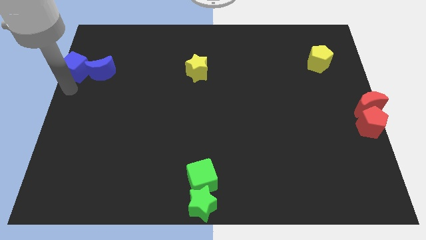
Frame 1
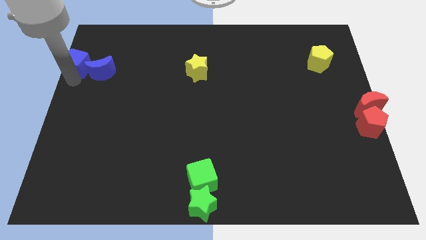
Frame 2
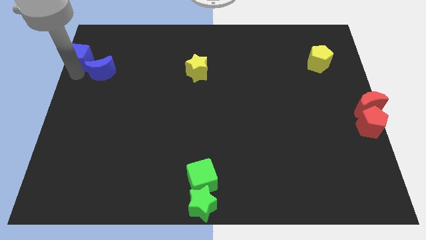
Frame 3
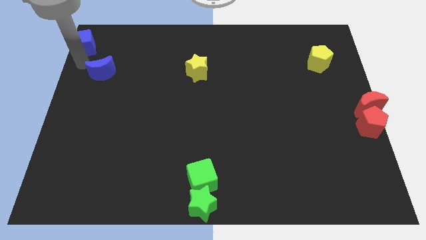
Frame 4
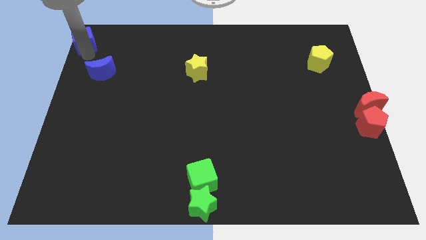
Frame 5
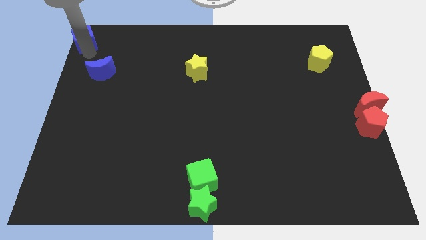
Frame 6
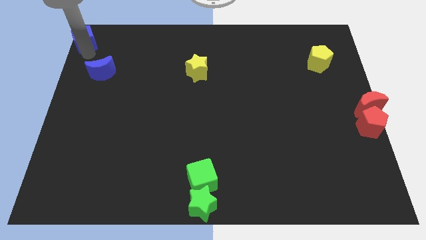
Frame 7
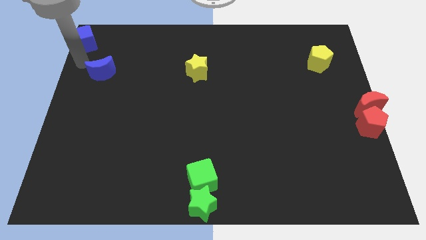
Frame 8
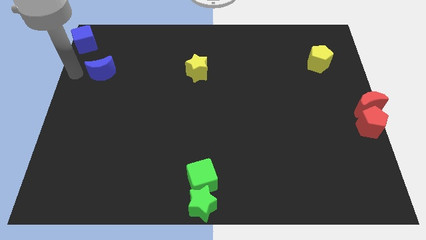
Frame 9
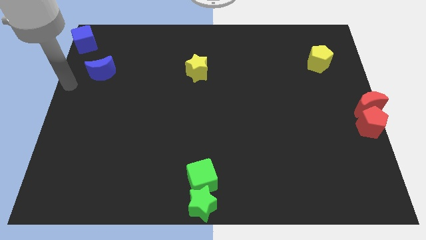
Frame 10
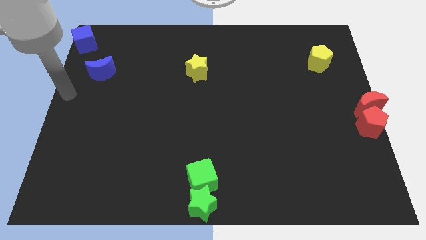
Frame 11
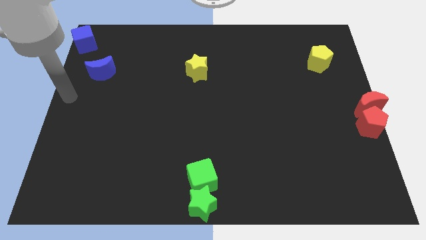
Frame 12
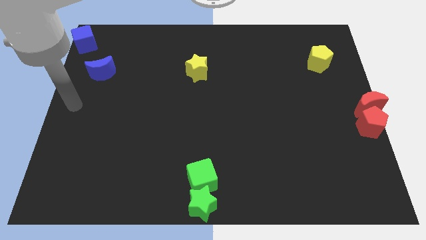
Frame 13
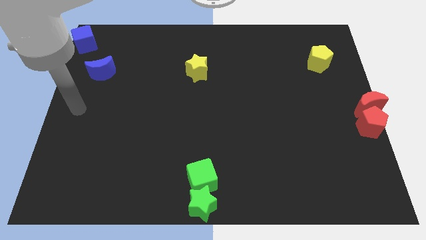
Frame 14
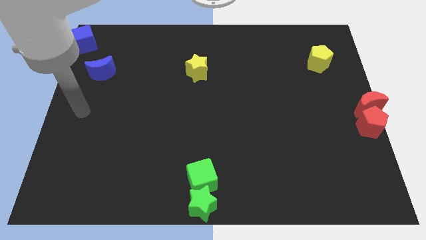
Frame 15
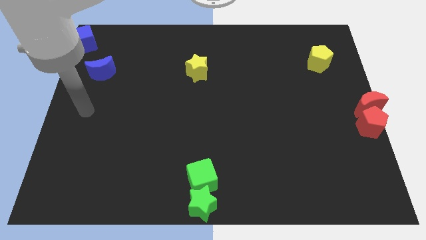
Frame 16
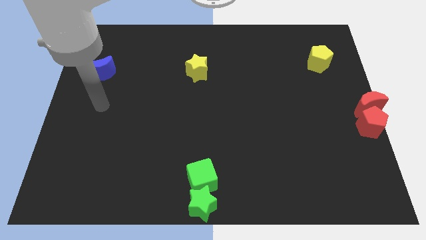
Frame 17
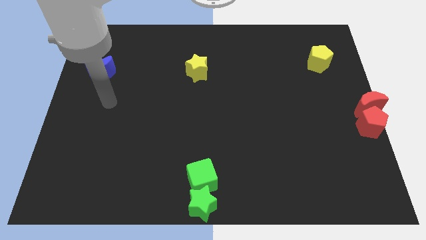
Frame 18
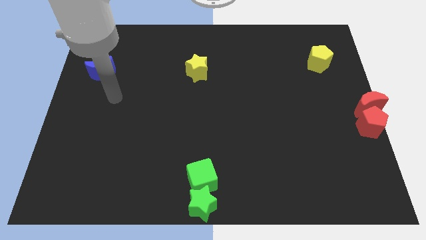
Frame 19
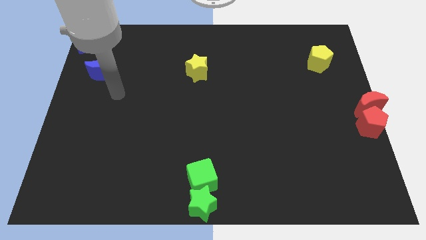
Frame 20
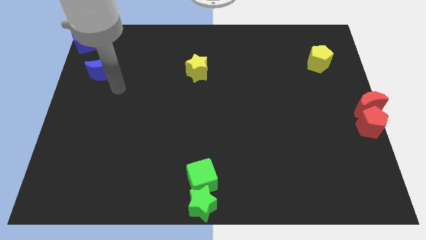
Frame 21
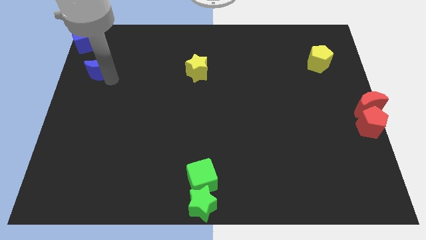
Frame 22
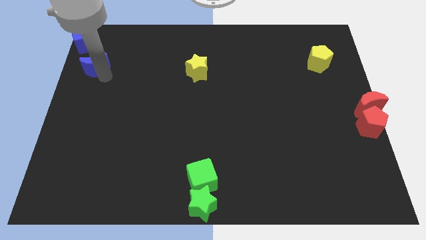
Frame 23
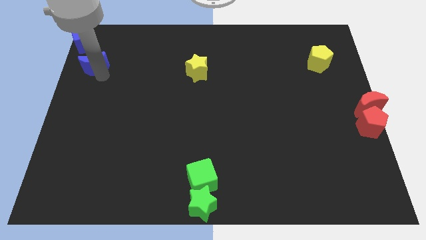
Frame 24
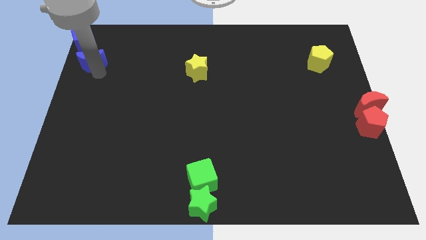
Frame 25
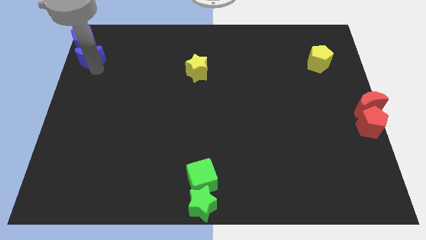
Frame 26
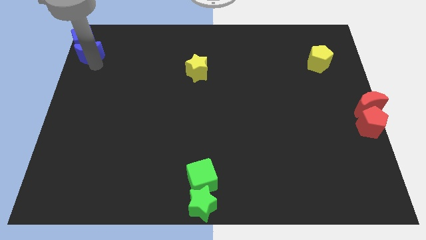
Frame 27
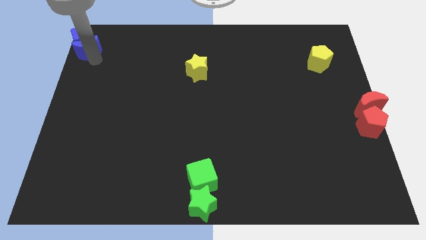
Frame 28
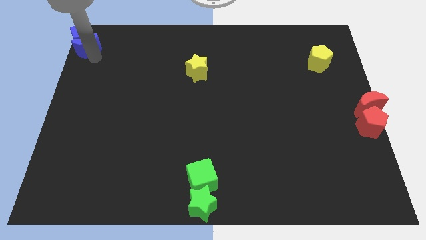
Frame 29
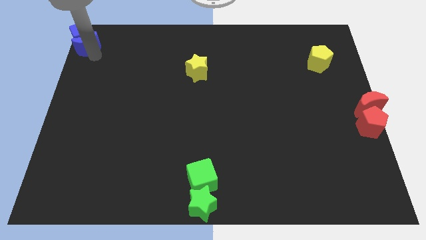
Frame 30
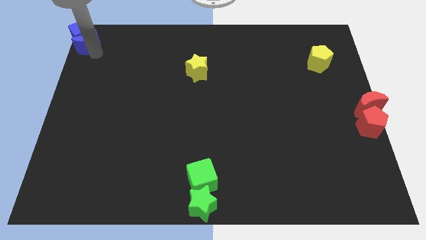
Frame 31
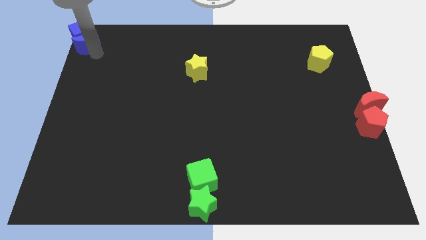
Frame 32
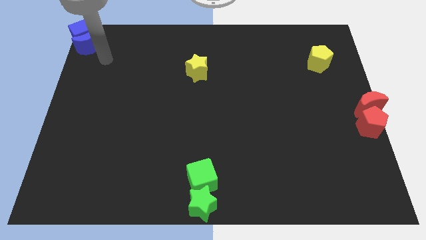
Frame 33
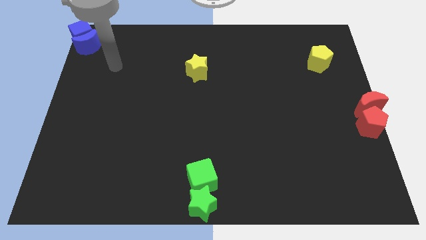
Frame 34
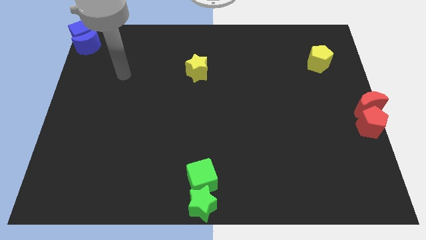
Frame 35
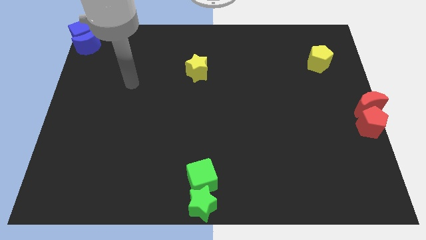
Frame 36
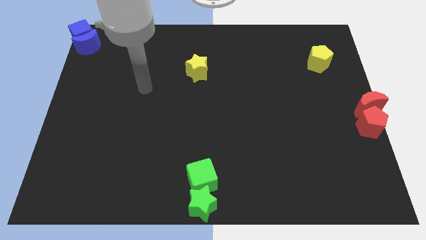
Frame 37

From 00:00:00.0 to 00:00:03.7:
put the blue blocks at the top left corner of the board

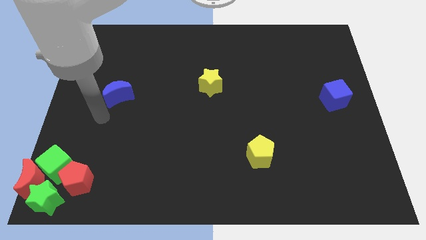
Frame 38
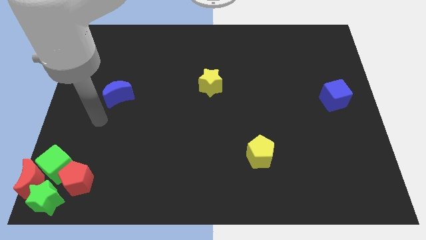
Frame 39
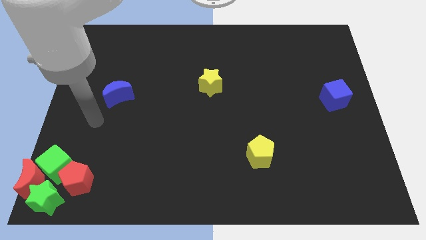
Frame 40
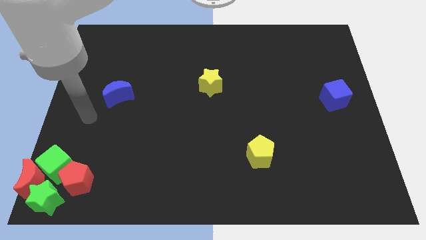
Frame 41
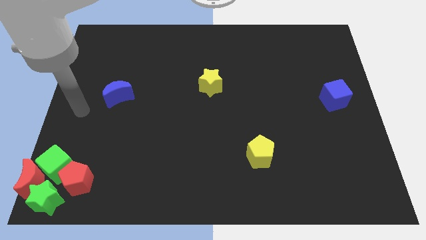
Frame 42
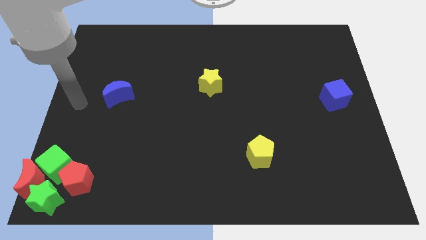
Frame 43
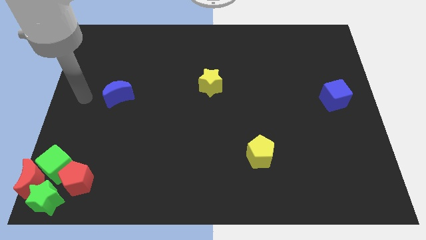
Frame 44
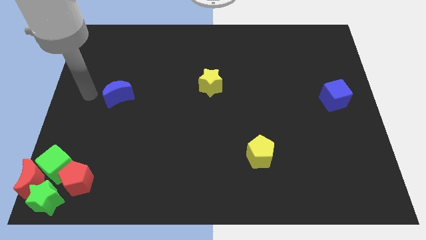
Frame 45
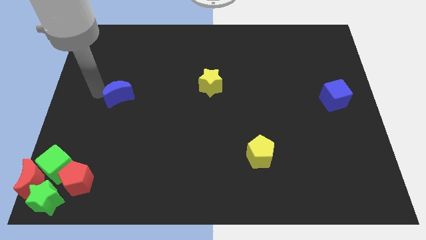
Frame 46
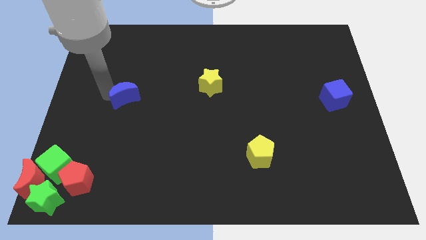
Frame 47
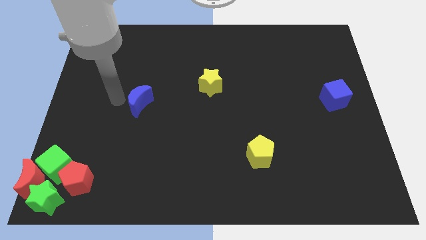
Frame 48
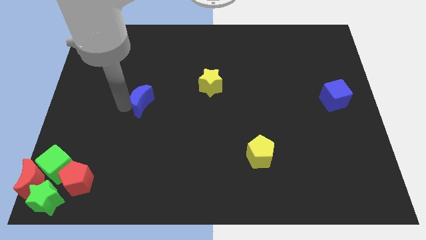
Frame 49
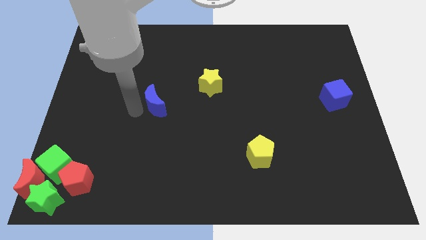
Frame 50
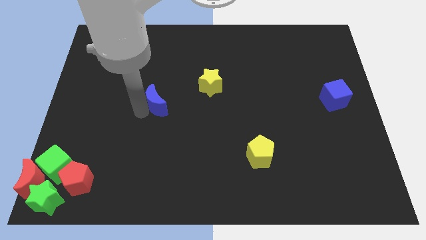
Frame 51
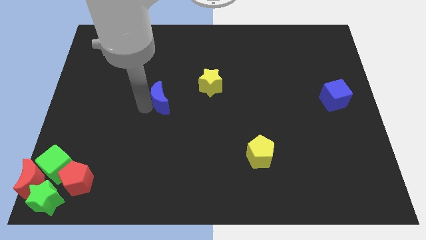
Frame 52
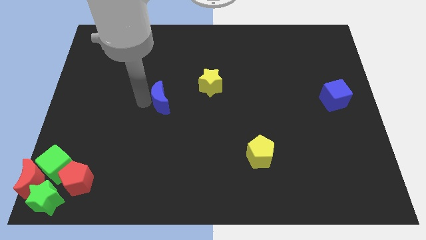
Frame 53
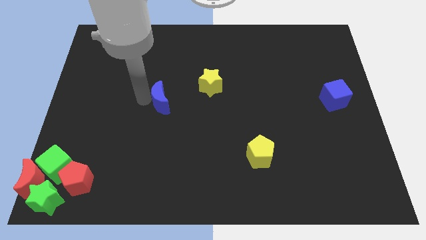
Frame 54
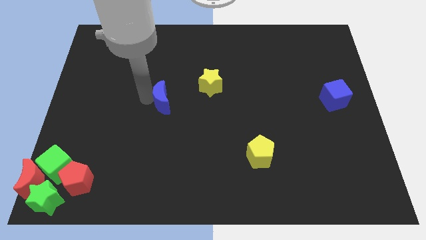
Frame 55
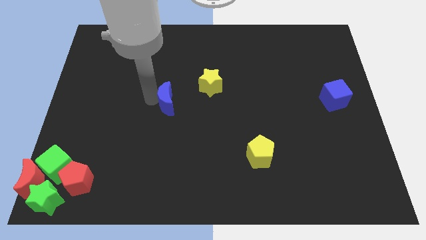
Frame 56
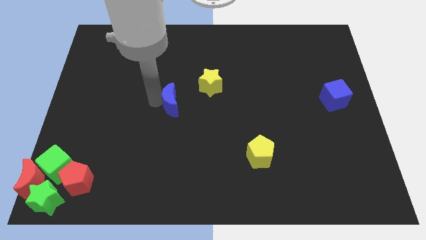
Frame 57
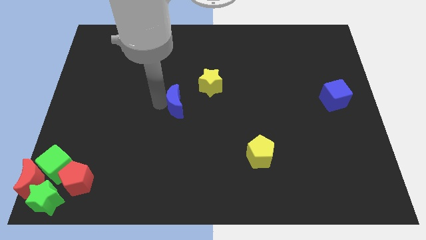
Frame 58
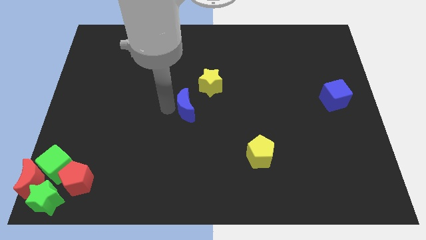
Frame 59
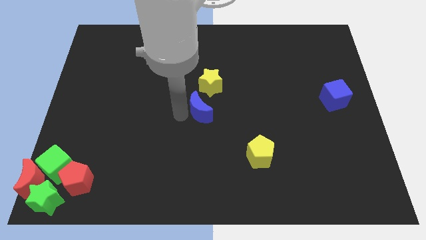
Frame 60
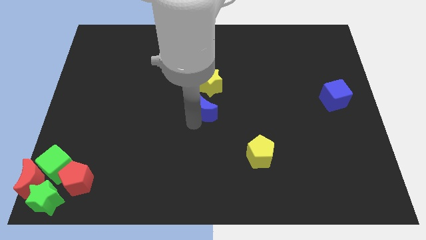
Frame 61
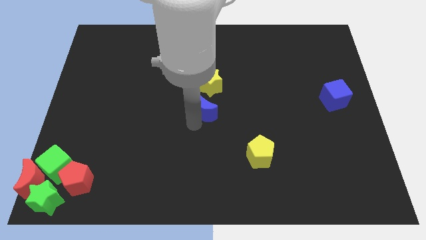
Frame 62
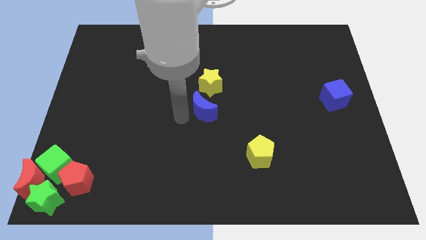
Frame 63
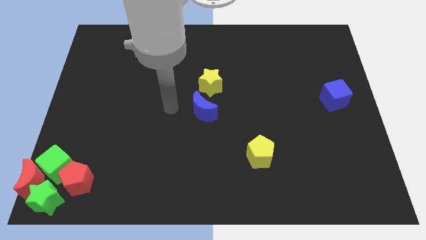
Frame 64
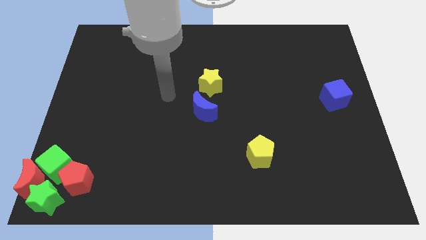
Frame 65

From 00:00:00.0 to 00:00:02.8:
push the blue moon below the yellow star

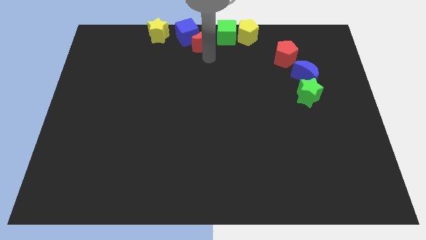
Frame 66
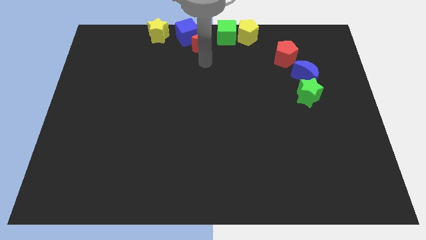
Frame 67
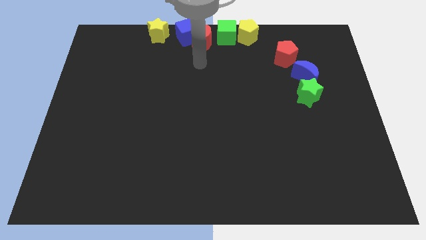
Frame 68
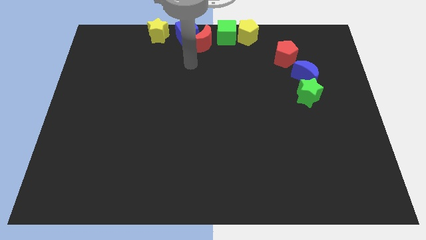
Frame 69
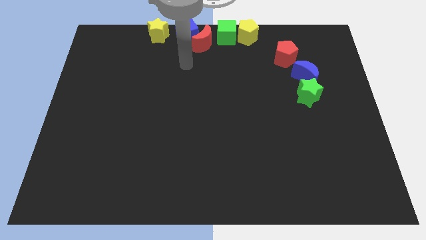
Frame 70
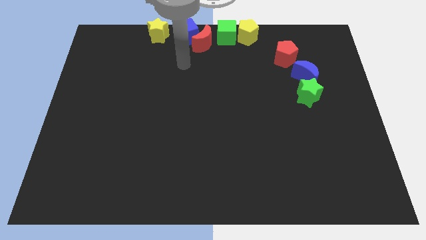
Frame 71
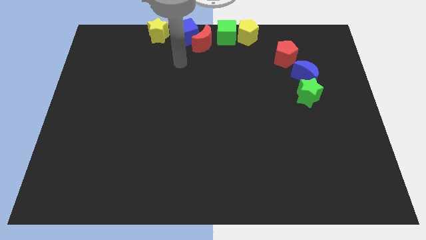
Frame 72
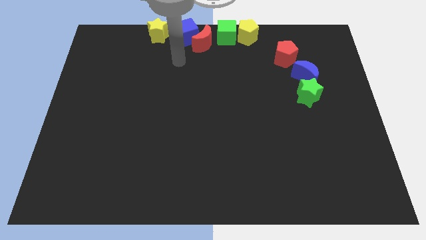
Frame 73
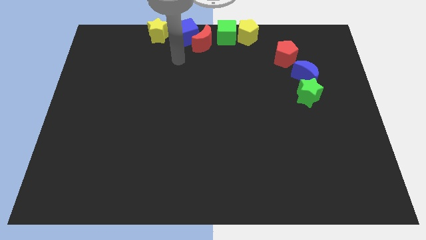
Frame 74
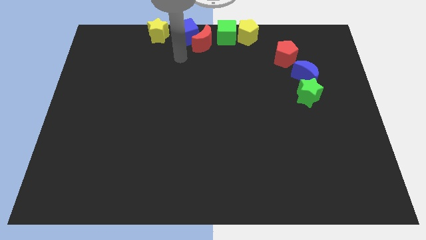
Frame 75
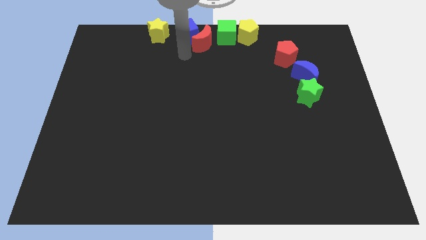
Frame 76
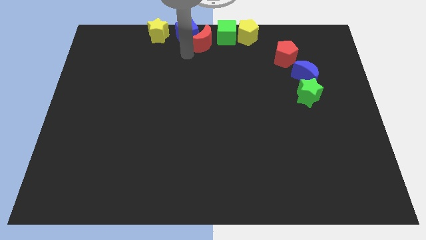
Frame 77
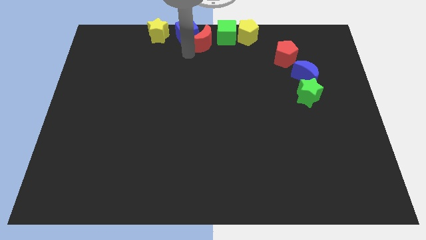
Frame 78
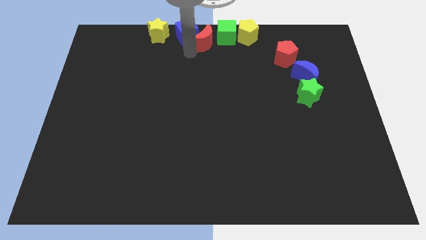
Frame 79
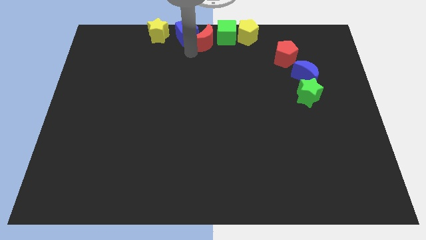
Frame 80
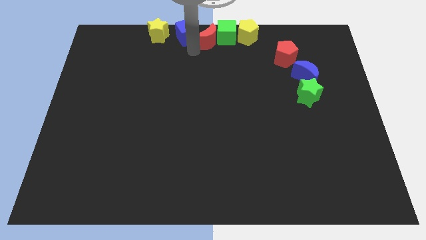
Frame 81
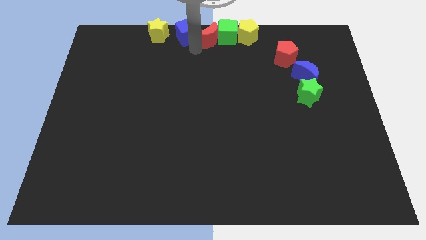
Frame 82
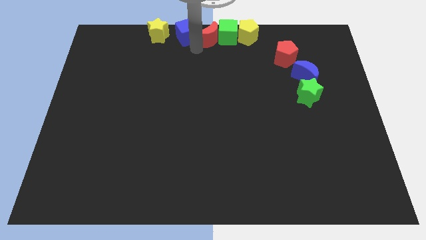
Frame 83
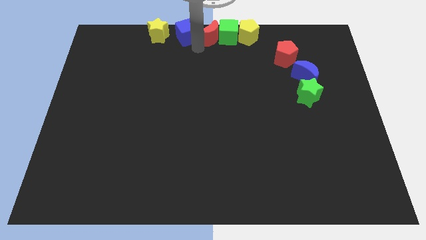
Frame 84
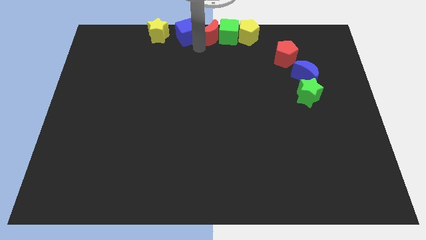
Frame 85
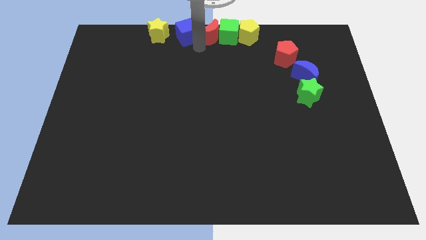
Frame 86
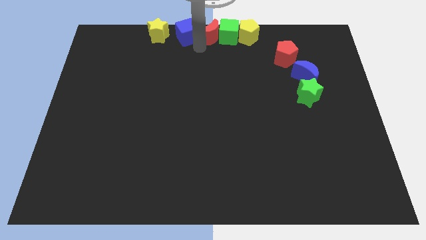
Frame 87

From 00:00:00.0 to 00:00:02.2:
place the red moon in between the green cube and blue cube

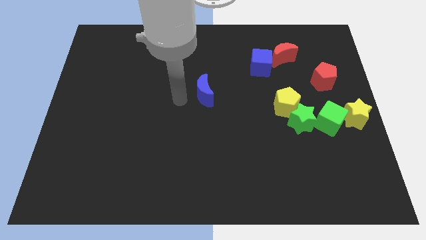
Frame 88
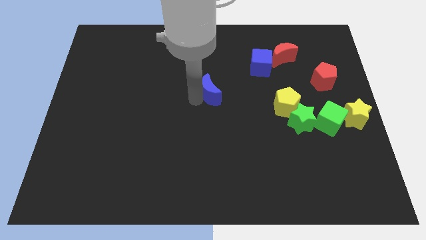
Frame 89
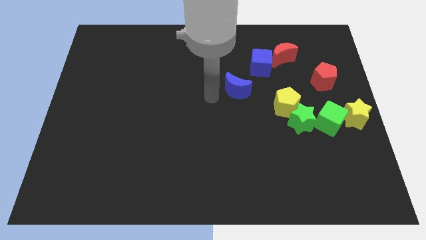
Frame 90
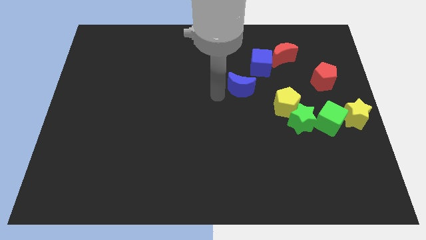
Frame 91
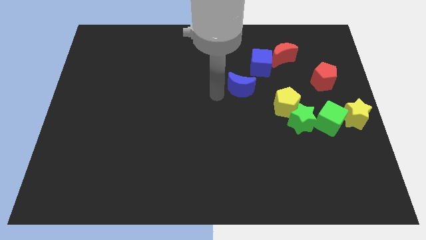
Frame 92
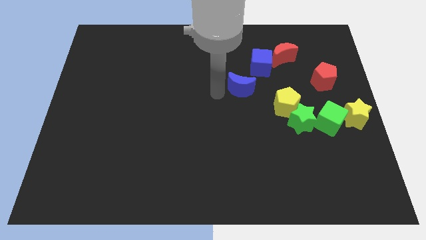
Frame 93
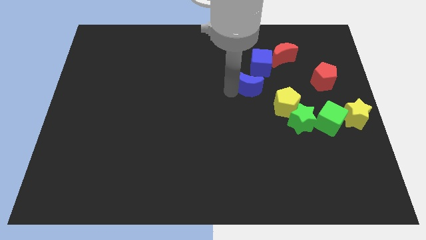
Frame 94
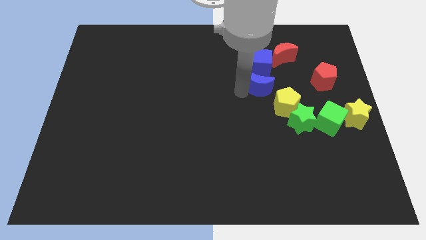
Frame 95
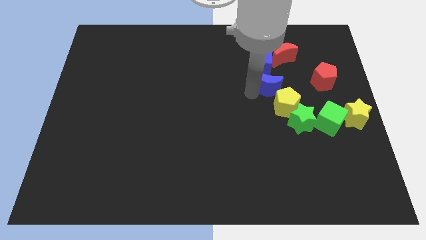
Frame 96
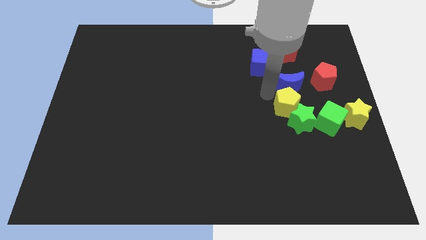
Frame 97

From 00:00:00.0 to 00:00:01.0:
place the blue crescent below the red crescent
